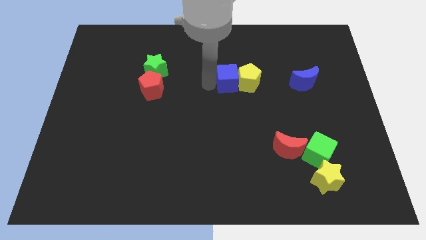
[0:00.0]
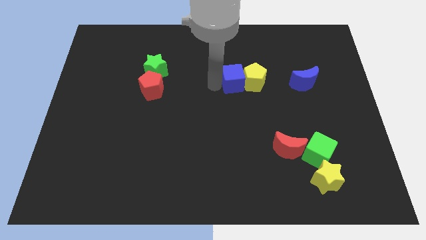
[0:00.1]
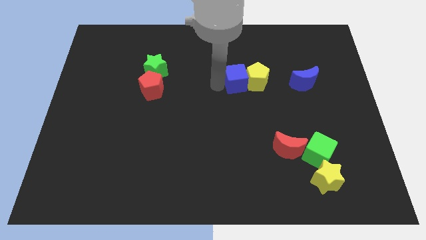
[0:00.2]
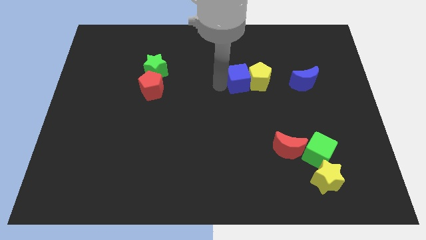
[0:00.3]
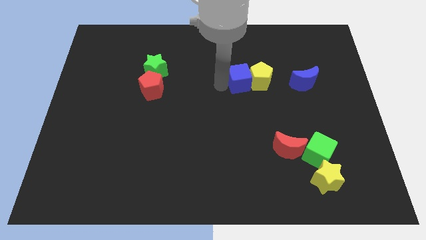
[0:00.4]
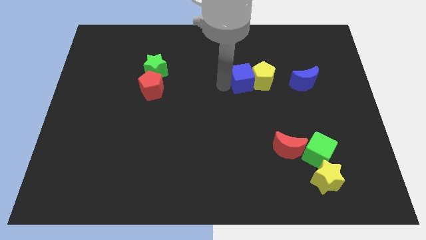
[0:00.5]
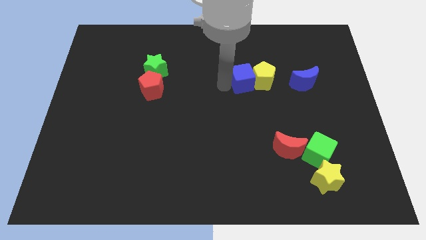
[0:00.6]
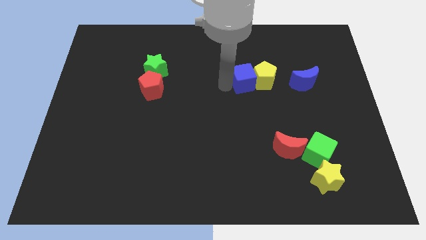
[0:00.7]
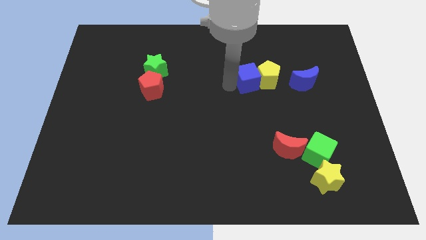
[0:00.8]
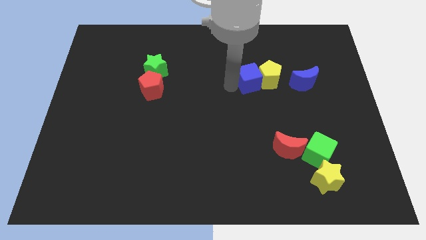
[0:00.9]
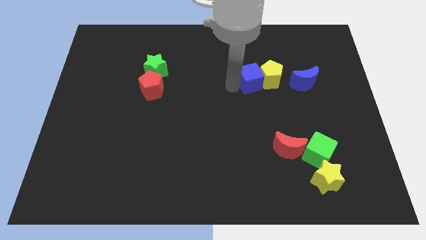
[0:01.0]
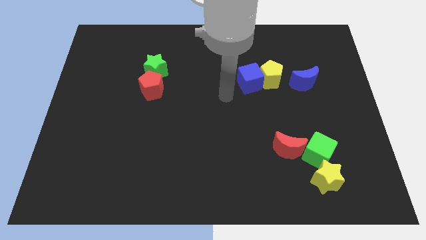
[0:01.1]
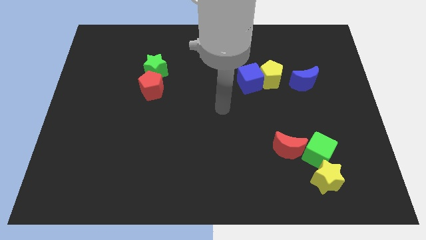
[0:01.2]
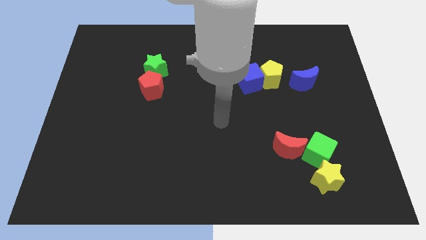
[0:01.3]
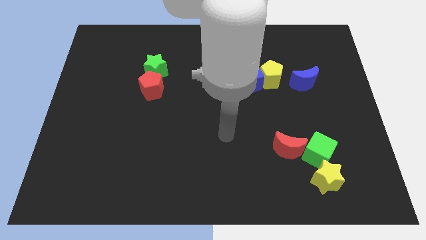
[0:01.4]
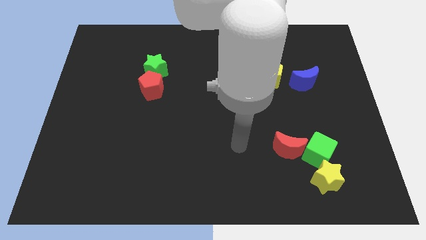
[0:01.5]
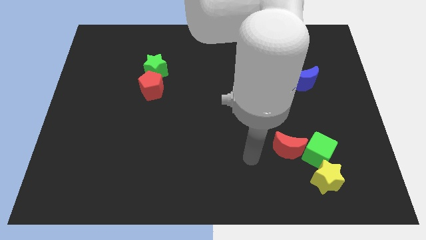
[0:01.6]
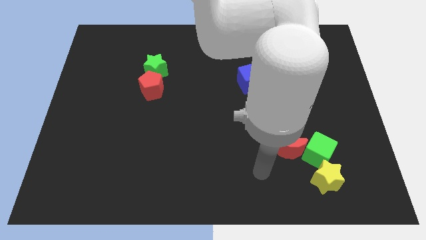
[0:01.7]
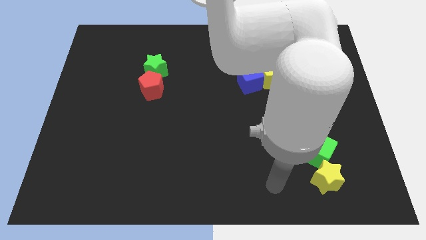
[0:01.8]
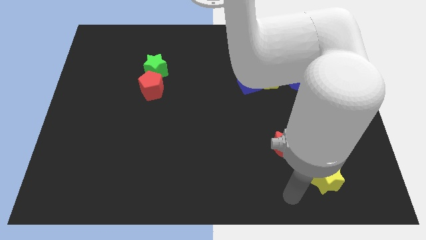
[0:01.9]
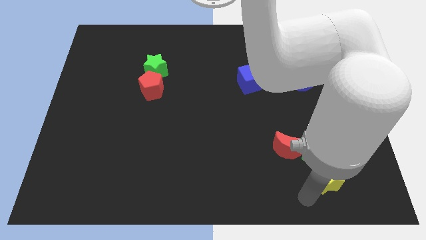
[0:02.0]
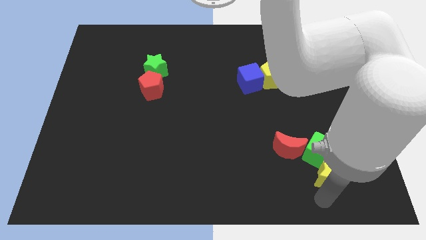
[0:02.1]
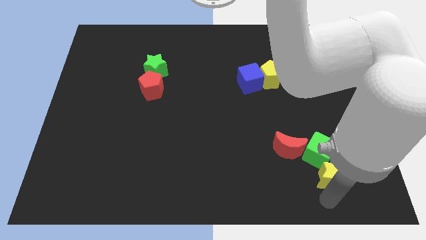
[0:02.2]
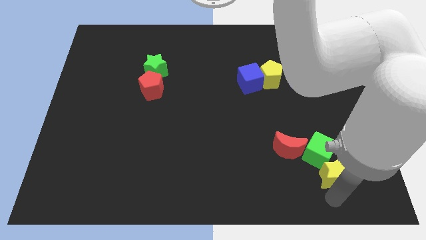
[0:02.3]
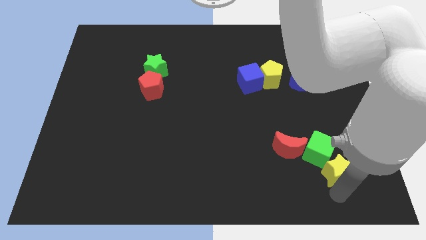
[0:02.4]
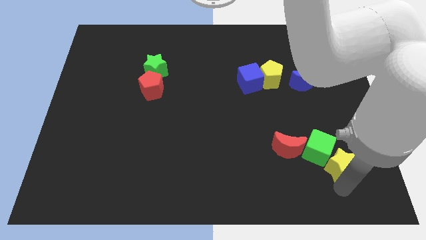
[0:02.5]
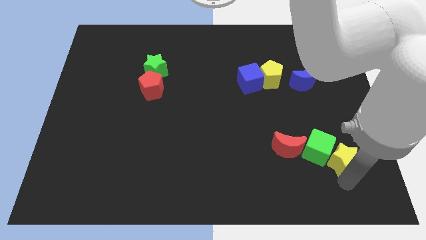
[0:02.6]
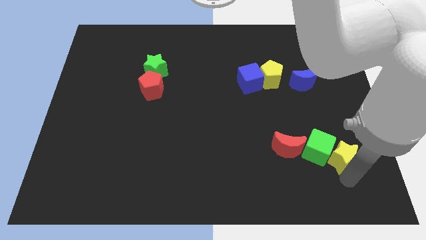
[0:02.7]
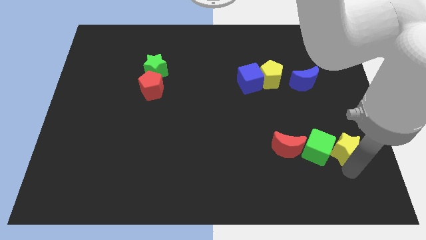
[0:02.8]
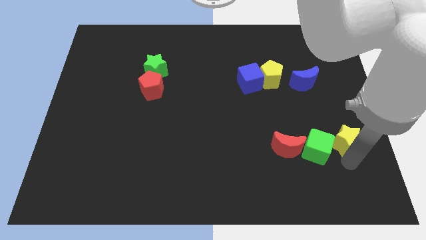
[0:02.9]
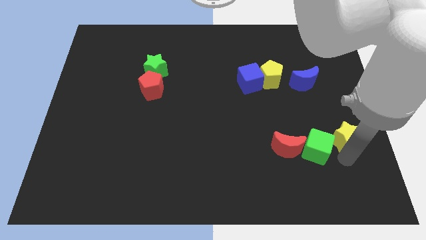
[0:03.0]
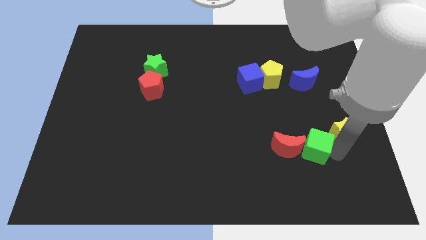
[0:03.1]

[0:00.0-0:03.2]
slide the yellow star to the top right of the green cube

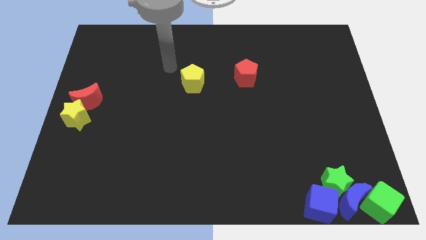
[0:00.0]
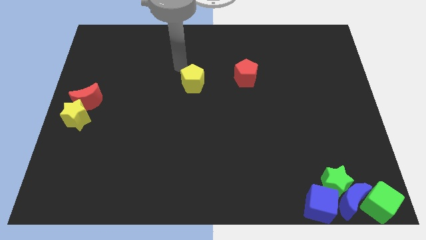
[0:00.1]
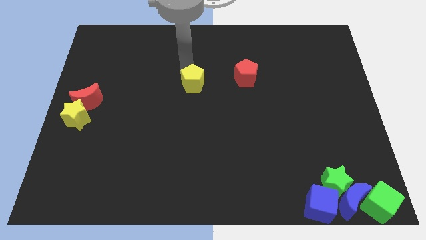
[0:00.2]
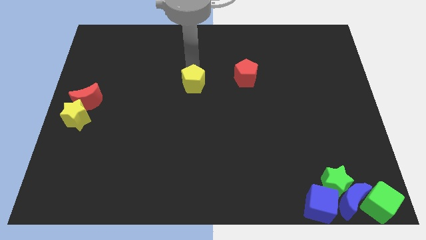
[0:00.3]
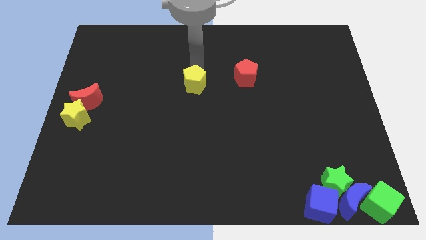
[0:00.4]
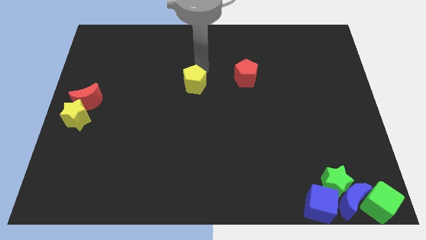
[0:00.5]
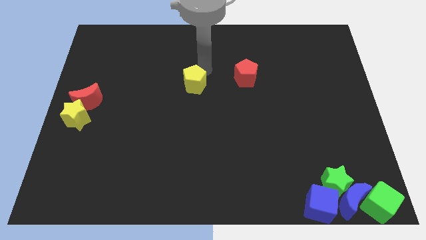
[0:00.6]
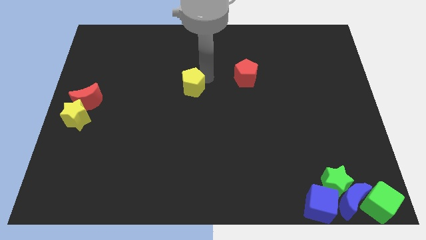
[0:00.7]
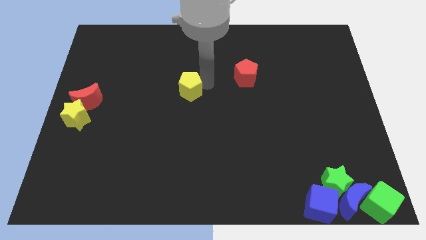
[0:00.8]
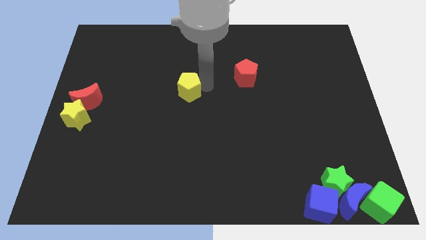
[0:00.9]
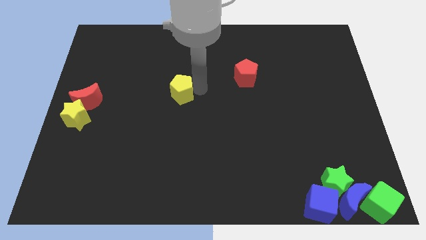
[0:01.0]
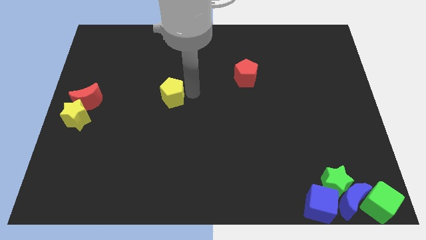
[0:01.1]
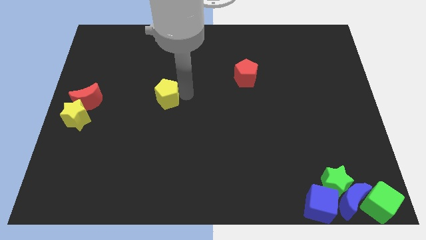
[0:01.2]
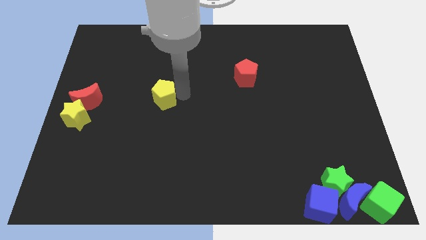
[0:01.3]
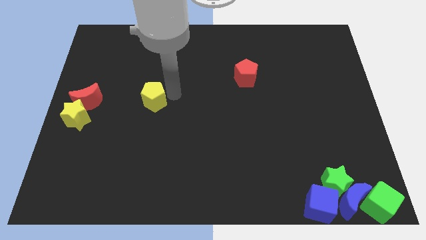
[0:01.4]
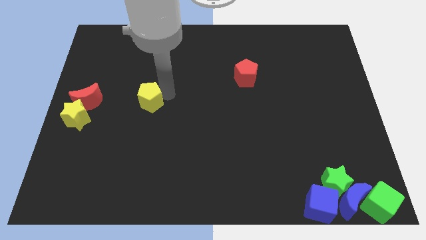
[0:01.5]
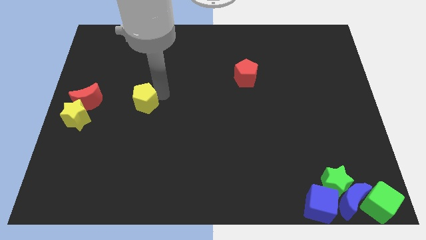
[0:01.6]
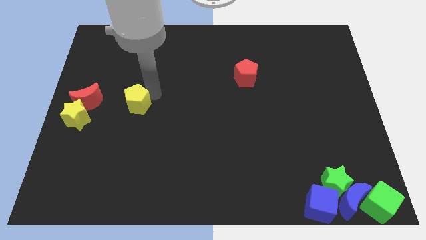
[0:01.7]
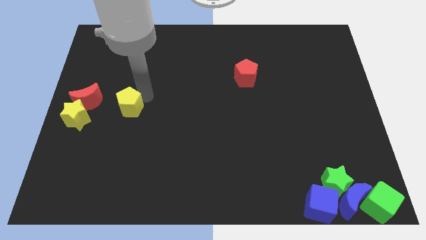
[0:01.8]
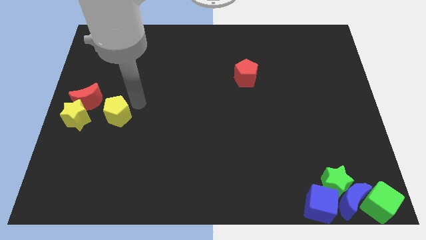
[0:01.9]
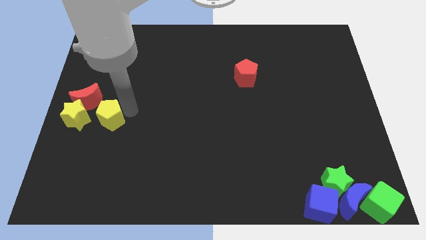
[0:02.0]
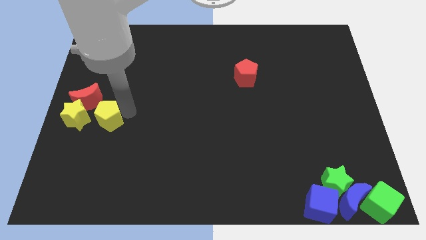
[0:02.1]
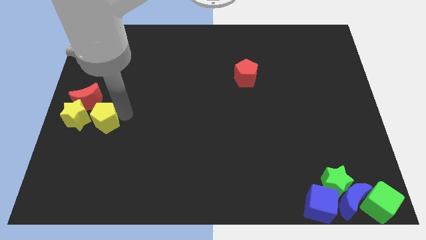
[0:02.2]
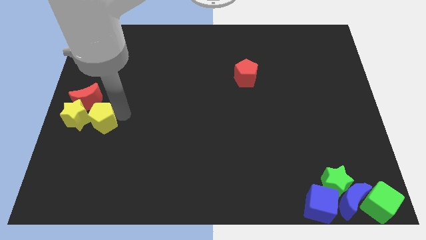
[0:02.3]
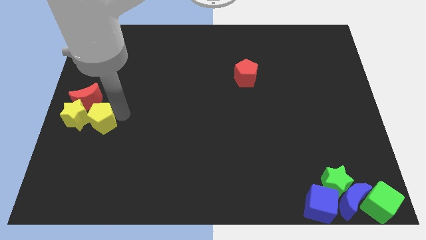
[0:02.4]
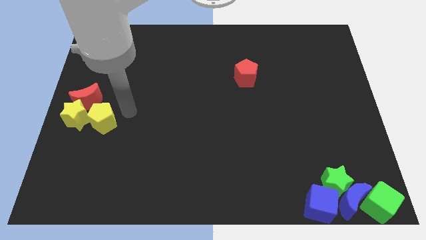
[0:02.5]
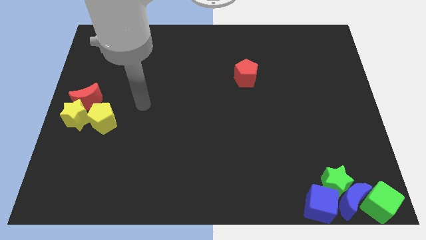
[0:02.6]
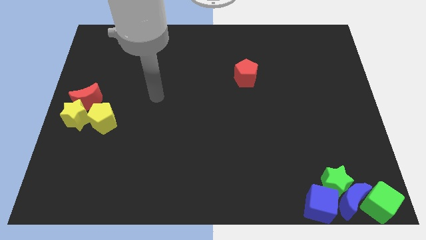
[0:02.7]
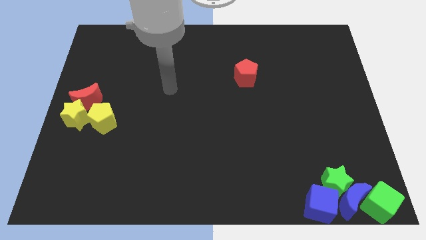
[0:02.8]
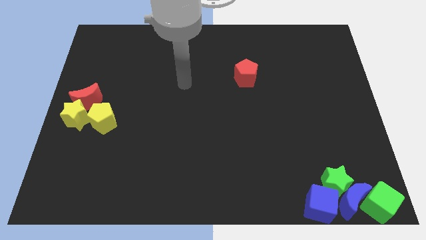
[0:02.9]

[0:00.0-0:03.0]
put the yellow pentagon to the right side of yellow star

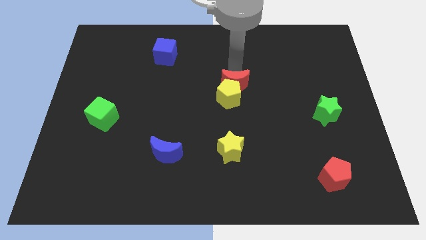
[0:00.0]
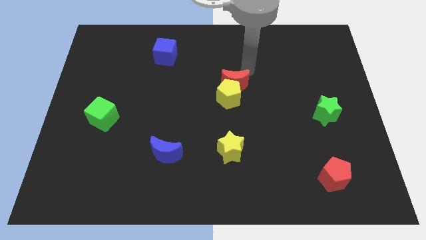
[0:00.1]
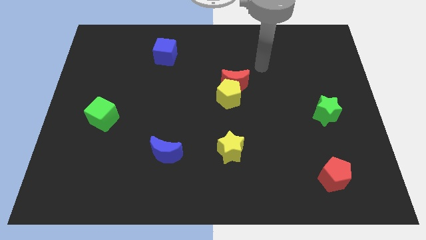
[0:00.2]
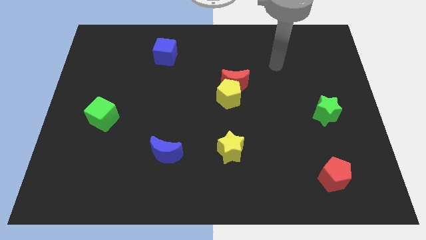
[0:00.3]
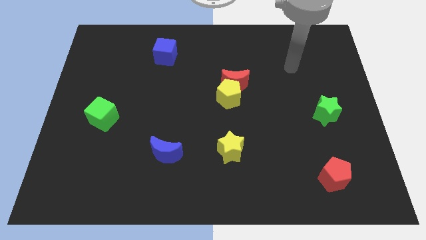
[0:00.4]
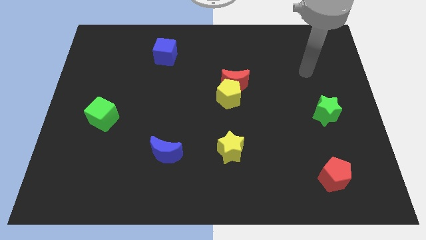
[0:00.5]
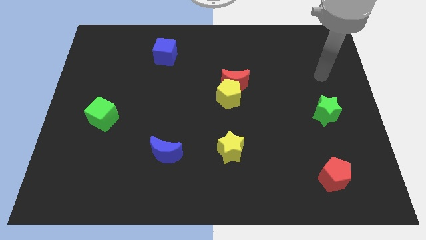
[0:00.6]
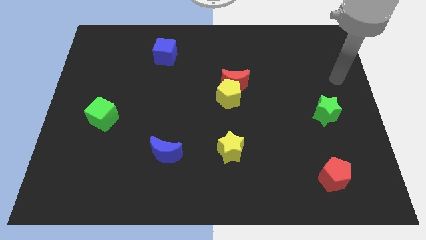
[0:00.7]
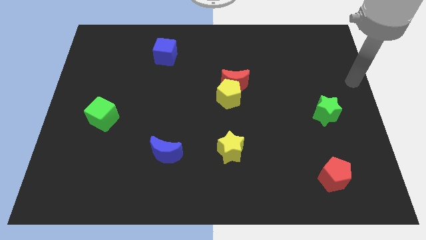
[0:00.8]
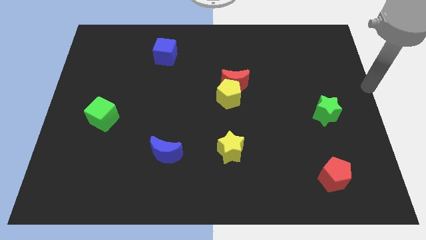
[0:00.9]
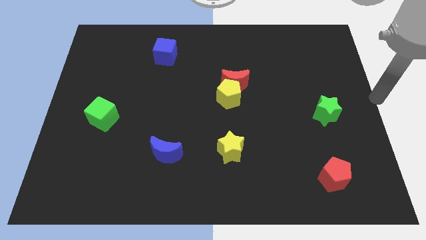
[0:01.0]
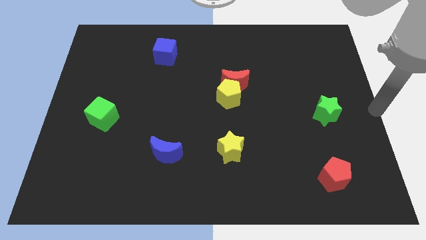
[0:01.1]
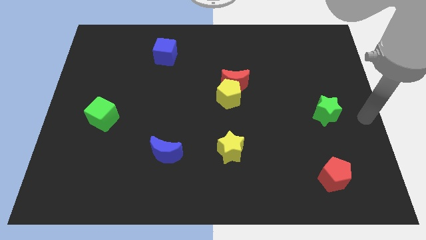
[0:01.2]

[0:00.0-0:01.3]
go away from the red moon

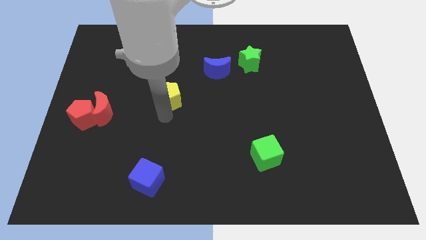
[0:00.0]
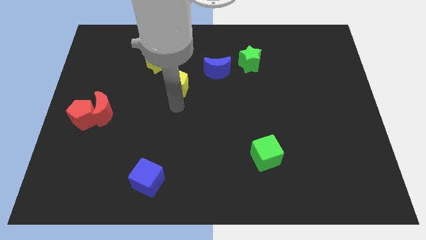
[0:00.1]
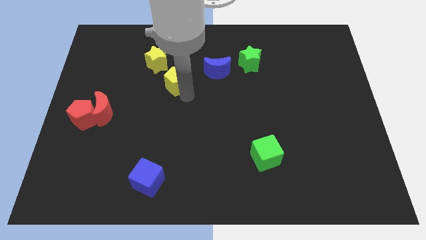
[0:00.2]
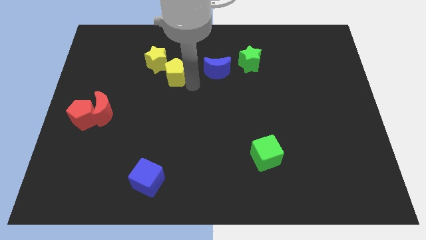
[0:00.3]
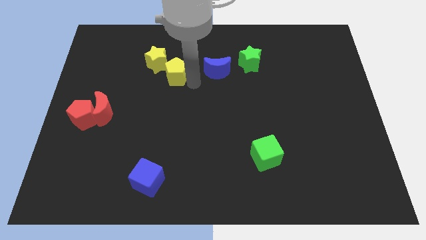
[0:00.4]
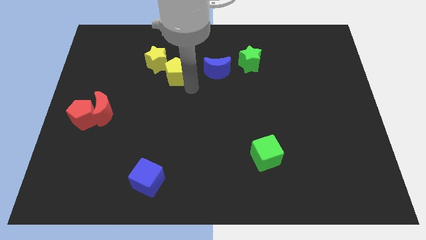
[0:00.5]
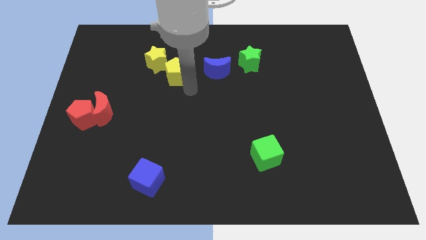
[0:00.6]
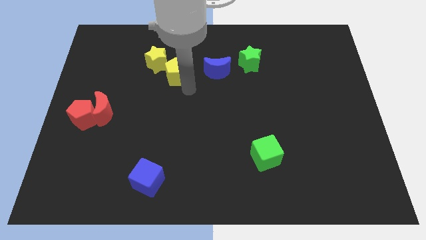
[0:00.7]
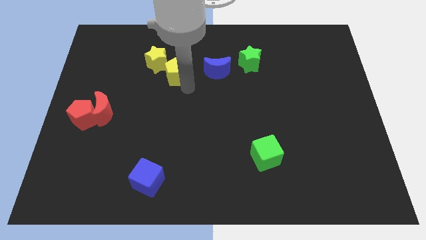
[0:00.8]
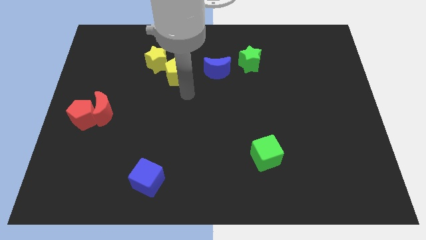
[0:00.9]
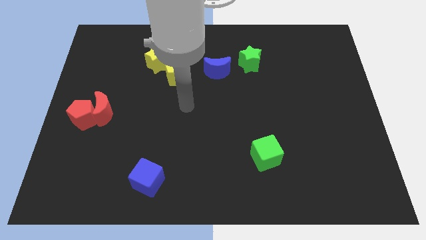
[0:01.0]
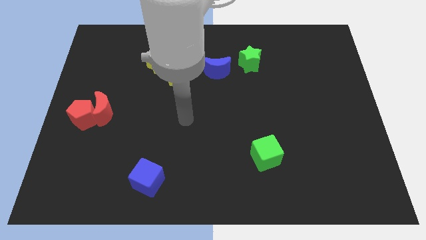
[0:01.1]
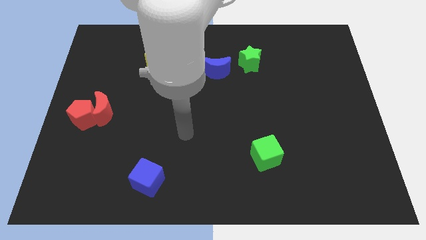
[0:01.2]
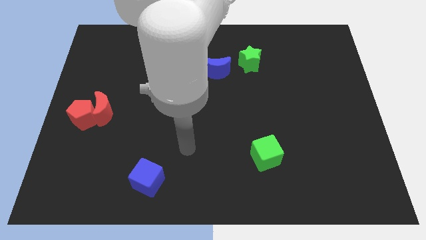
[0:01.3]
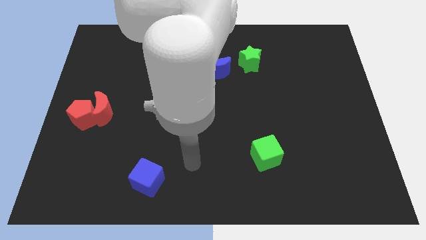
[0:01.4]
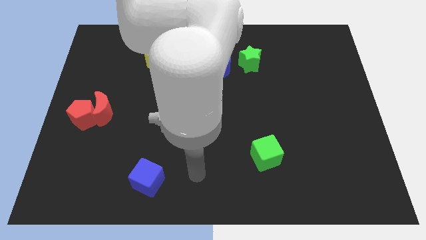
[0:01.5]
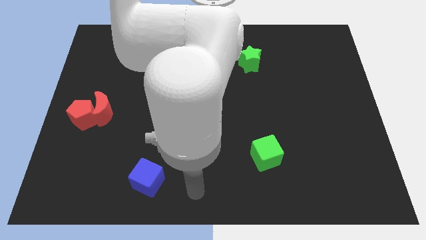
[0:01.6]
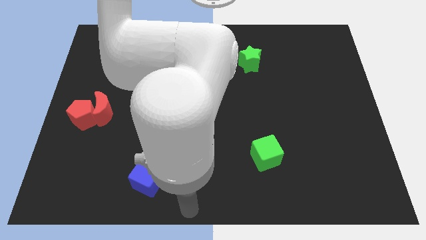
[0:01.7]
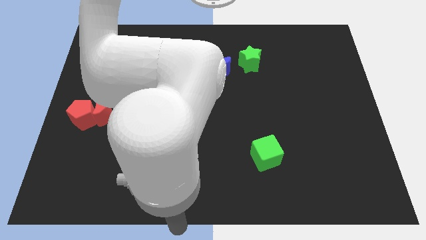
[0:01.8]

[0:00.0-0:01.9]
move your arm away from the yellow pentagon
